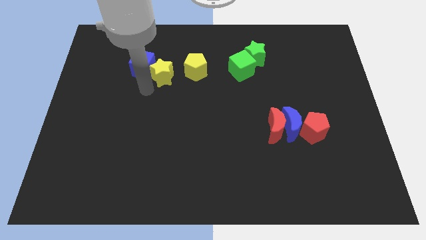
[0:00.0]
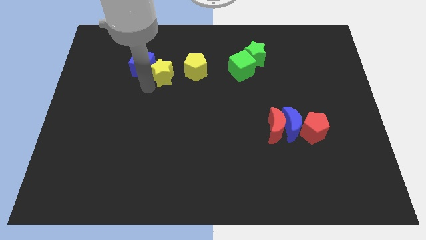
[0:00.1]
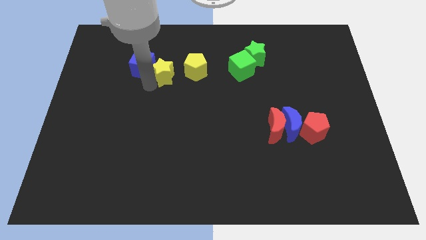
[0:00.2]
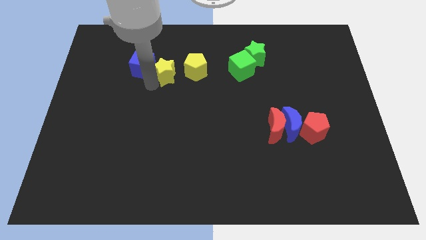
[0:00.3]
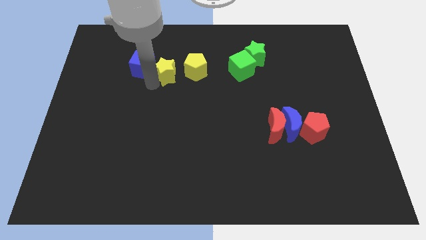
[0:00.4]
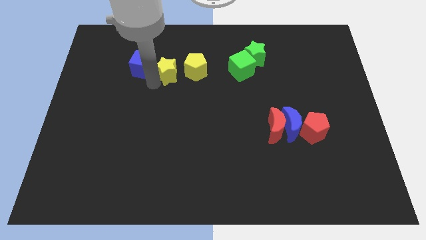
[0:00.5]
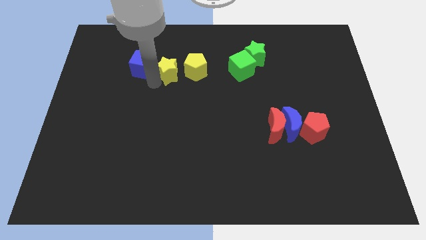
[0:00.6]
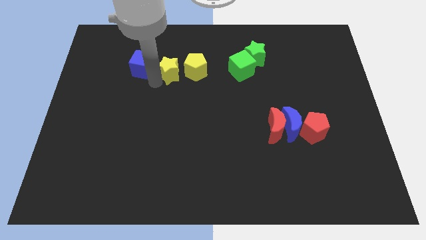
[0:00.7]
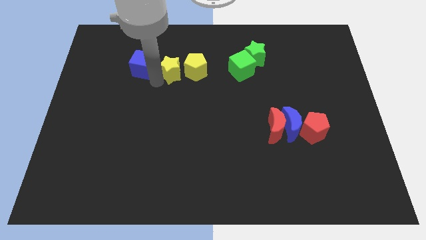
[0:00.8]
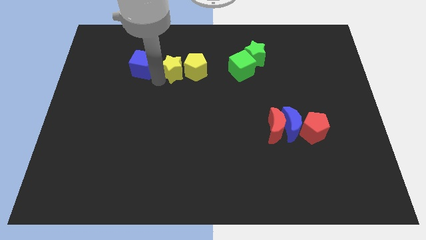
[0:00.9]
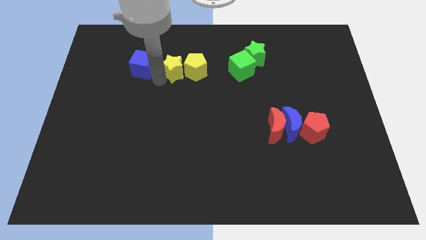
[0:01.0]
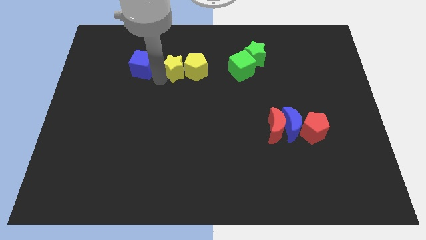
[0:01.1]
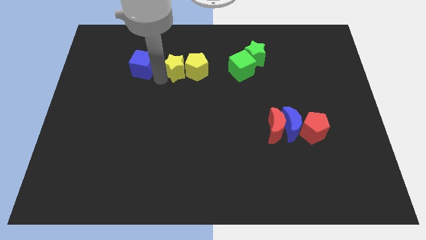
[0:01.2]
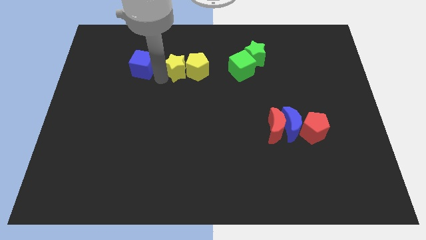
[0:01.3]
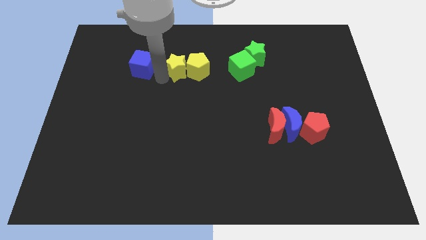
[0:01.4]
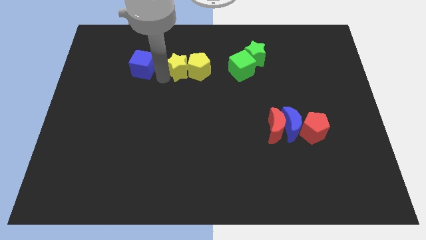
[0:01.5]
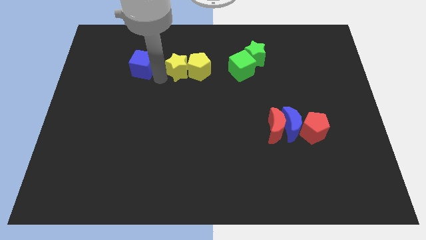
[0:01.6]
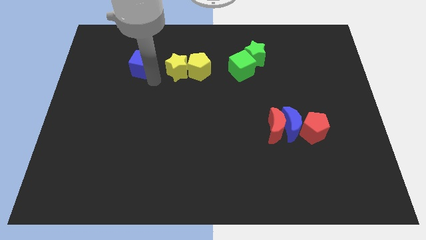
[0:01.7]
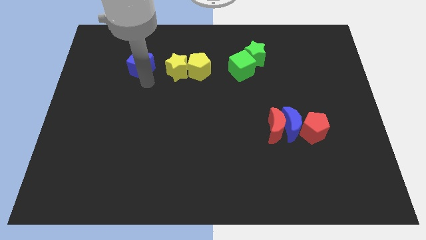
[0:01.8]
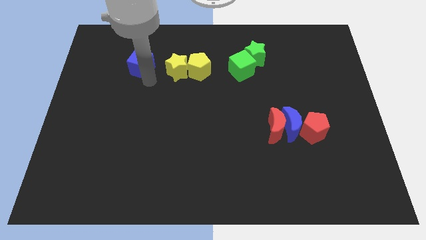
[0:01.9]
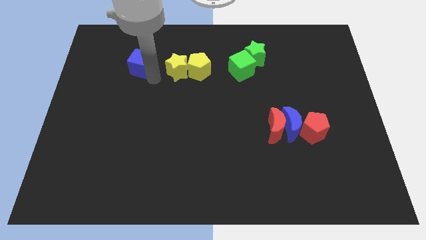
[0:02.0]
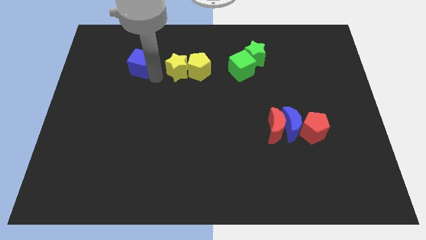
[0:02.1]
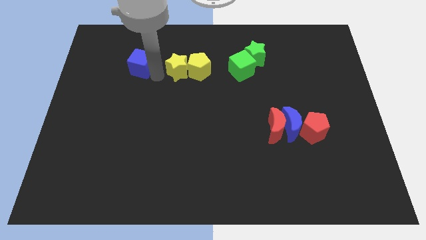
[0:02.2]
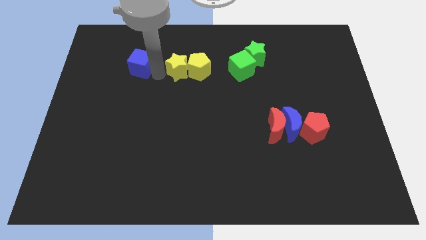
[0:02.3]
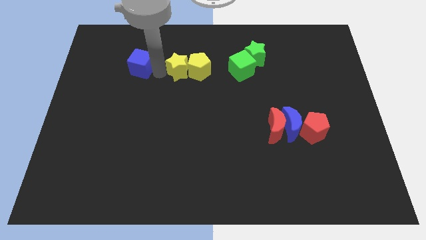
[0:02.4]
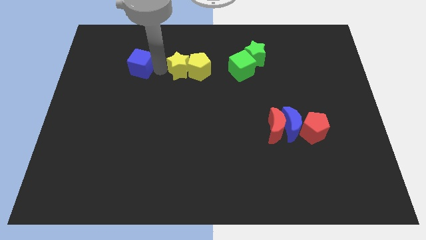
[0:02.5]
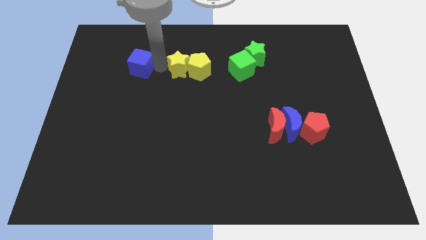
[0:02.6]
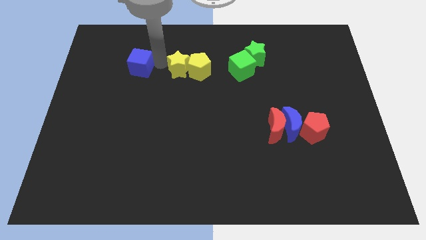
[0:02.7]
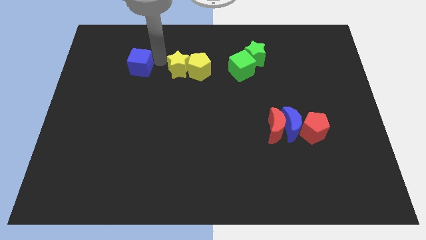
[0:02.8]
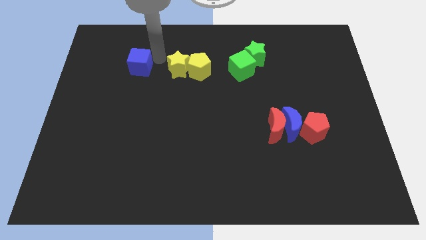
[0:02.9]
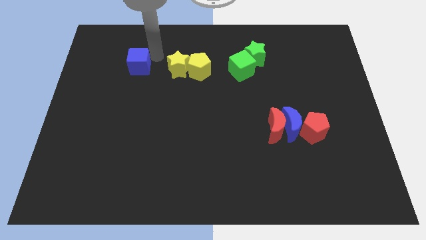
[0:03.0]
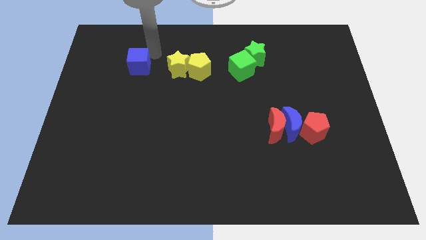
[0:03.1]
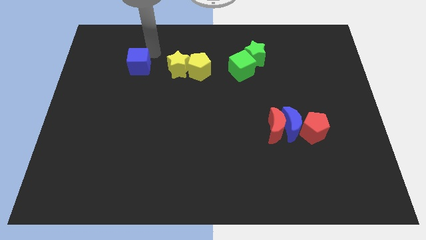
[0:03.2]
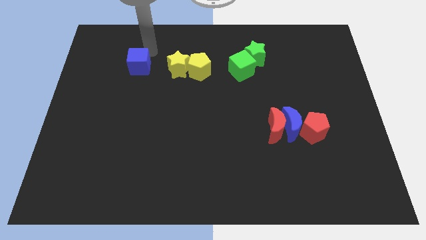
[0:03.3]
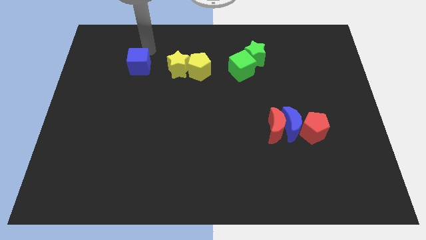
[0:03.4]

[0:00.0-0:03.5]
slightly push the yellow star towards the yellow pentagon

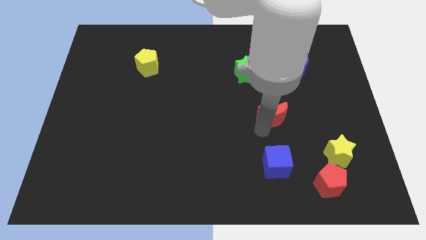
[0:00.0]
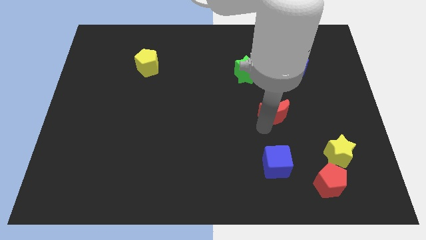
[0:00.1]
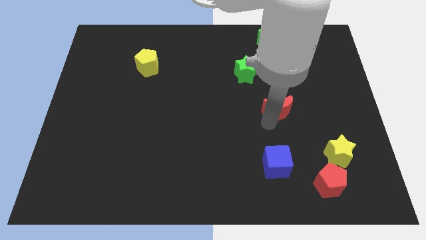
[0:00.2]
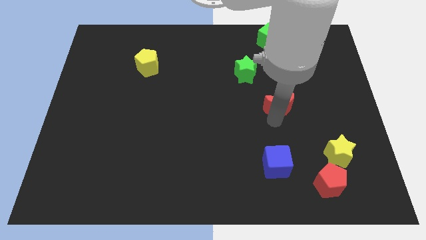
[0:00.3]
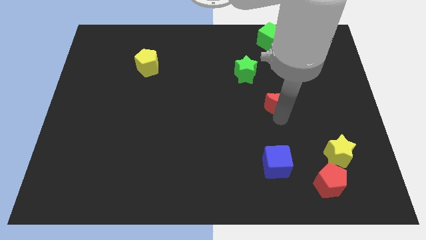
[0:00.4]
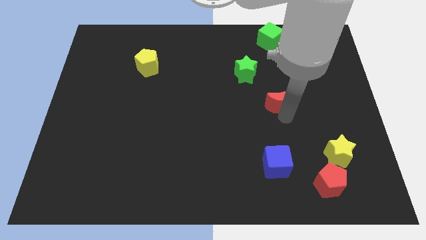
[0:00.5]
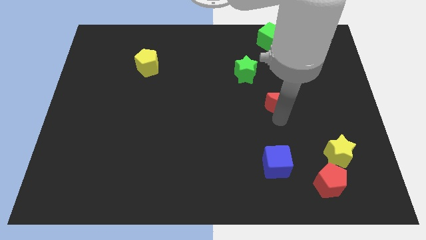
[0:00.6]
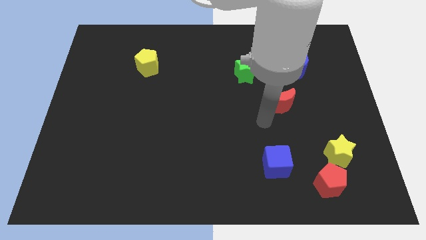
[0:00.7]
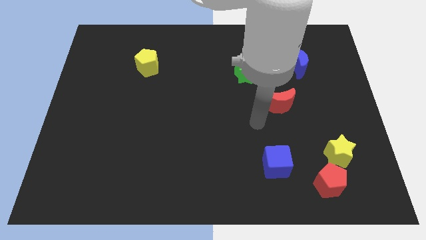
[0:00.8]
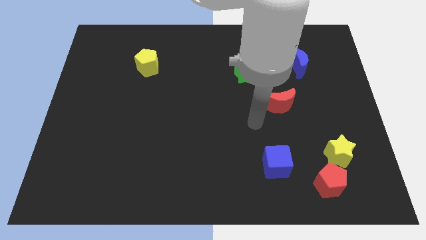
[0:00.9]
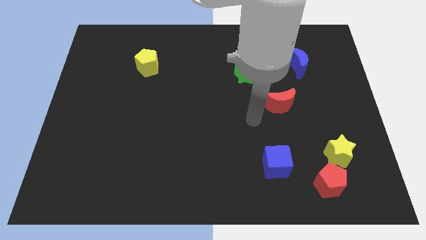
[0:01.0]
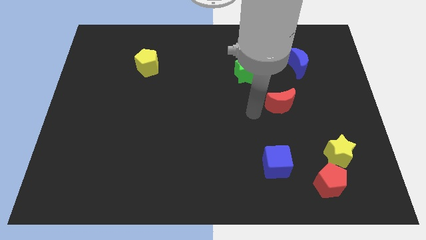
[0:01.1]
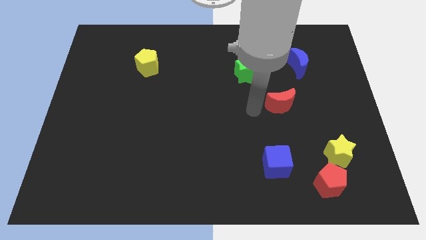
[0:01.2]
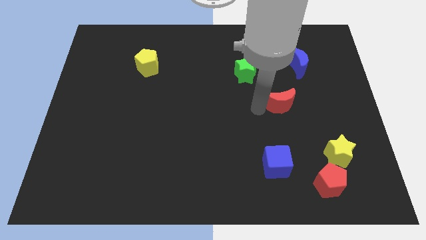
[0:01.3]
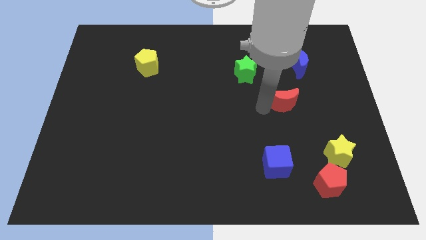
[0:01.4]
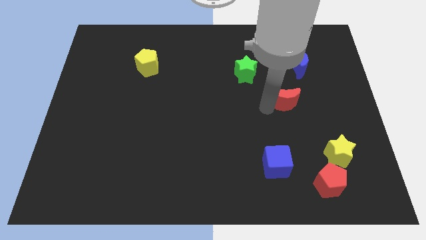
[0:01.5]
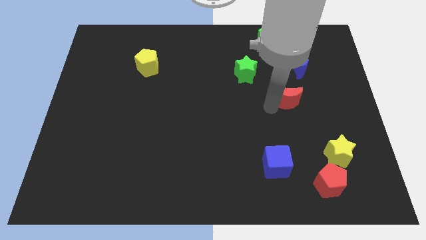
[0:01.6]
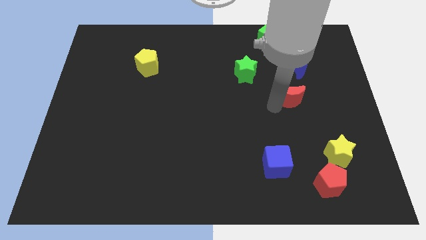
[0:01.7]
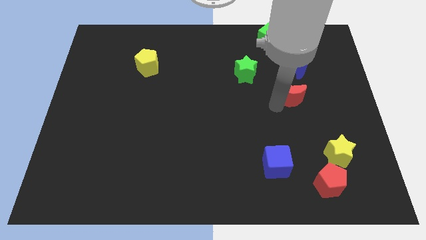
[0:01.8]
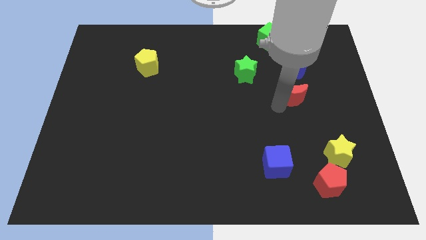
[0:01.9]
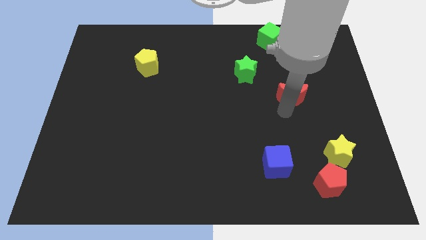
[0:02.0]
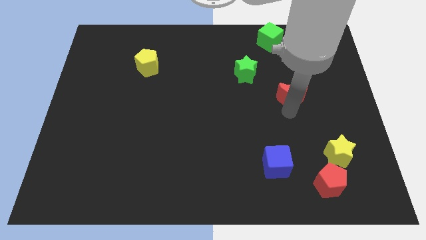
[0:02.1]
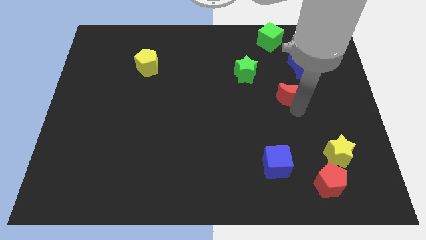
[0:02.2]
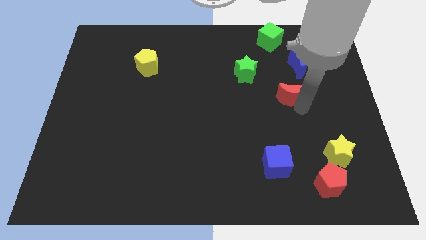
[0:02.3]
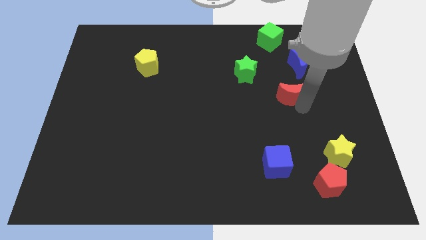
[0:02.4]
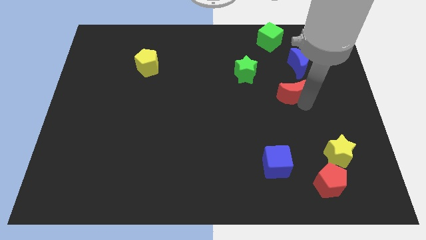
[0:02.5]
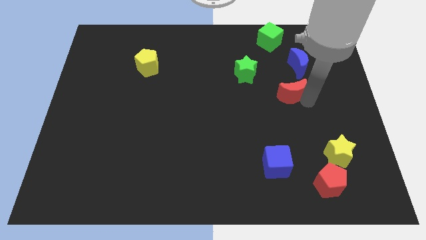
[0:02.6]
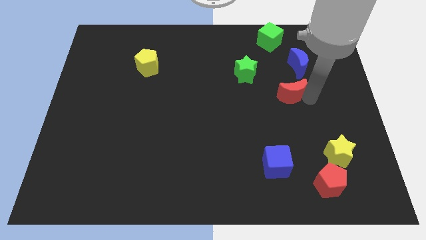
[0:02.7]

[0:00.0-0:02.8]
move the red crescent below the blue crescent

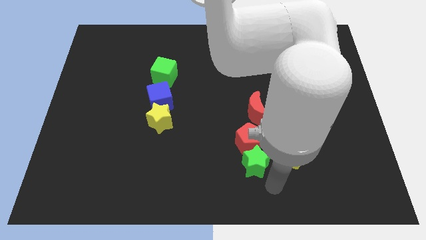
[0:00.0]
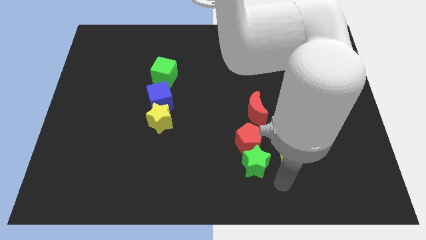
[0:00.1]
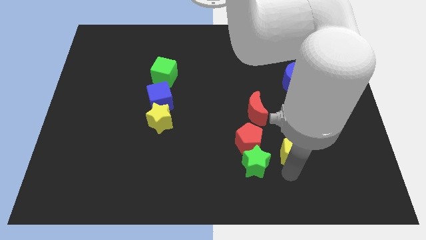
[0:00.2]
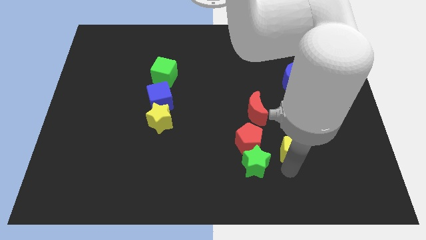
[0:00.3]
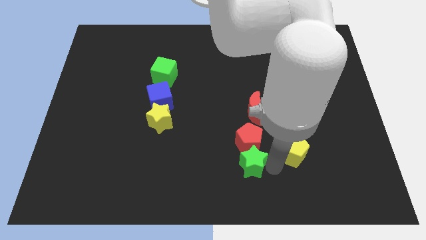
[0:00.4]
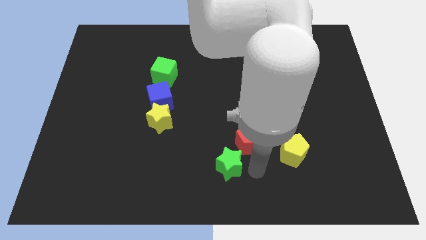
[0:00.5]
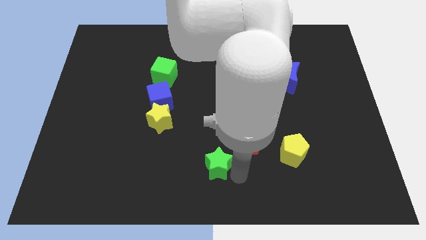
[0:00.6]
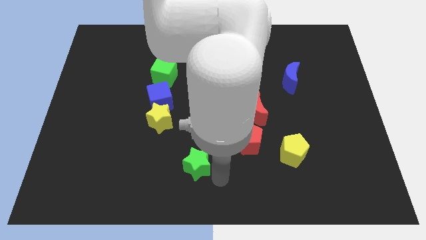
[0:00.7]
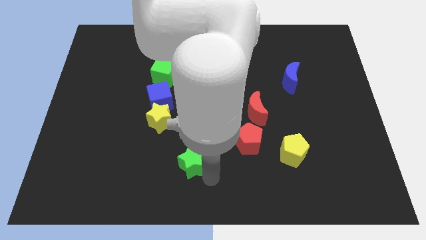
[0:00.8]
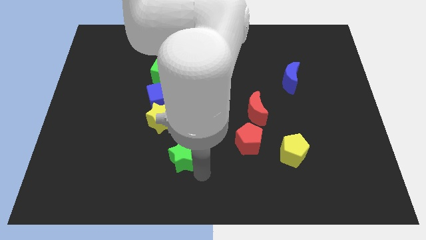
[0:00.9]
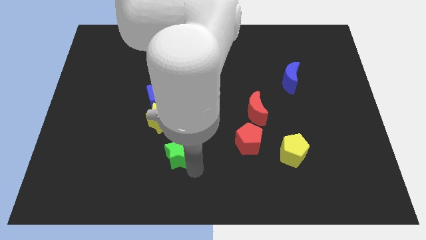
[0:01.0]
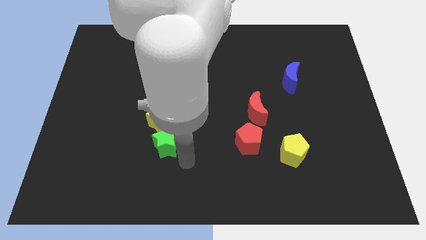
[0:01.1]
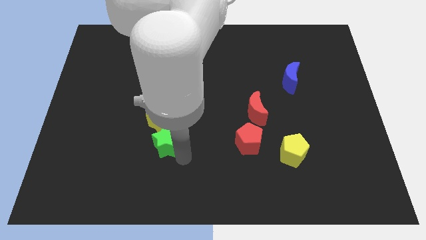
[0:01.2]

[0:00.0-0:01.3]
separate the green star from the red pentagon

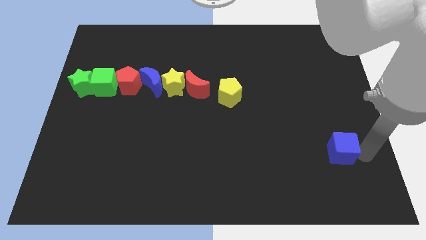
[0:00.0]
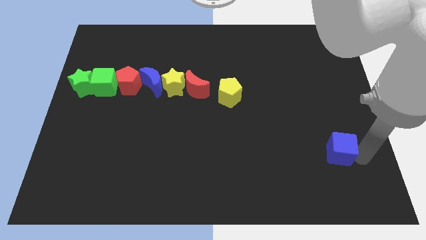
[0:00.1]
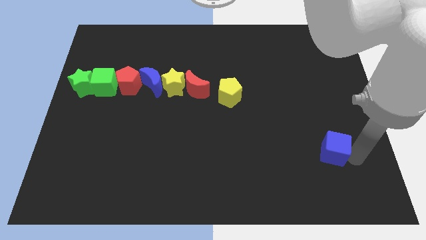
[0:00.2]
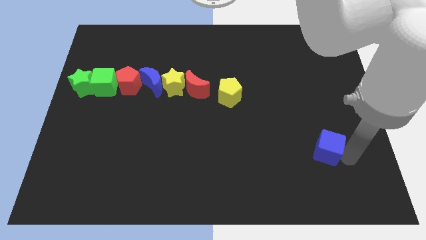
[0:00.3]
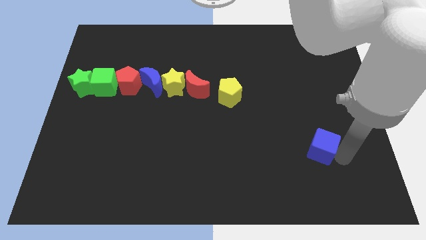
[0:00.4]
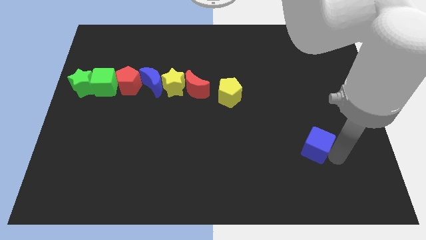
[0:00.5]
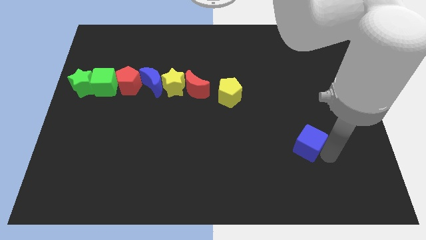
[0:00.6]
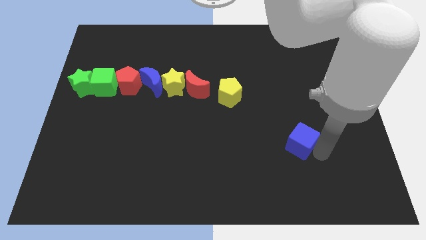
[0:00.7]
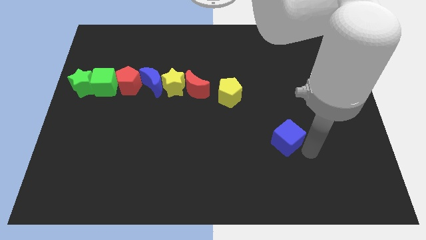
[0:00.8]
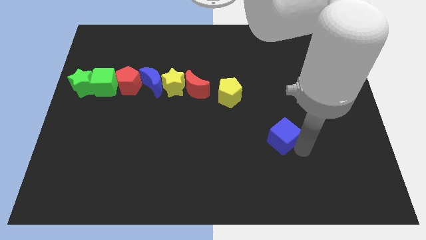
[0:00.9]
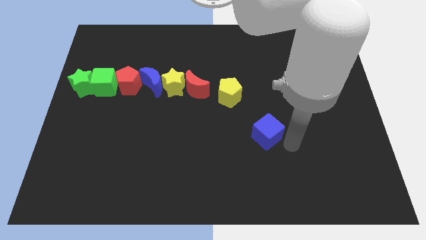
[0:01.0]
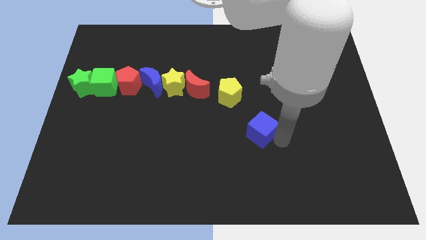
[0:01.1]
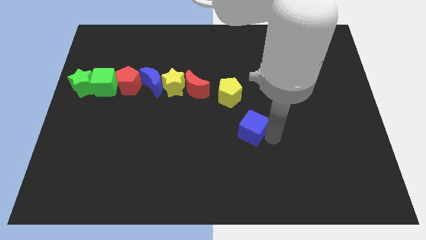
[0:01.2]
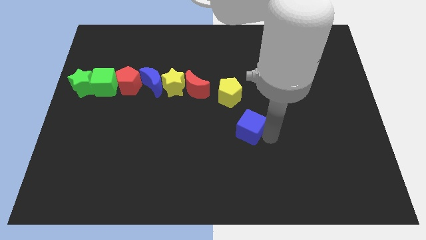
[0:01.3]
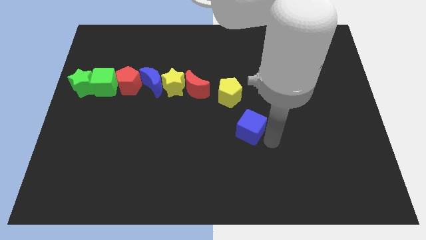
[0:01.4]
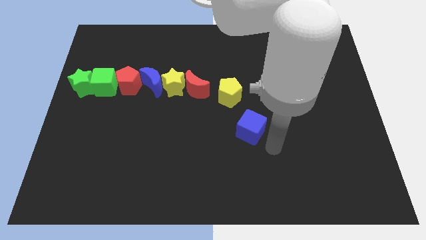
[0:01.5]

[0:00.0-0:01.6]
move the blue cube to the center of the board
